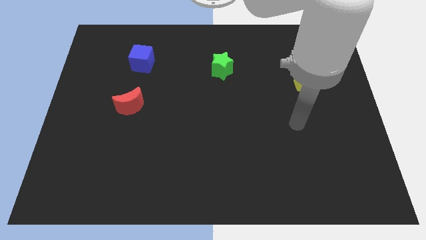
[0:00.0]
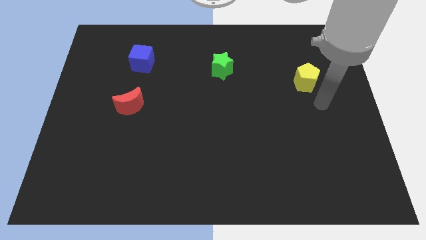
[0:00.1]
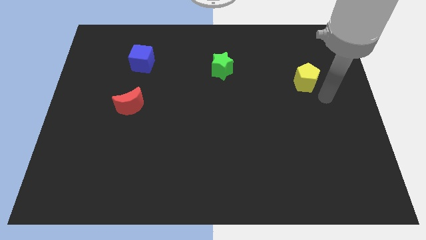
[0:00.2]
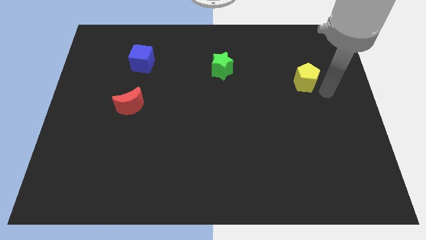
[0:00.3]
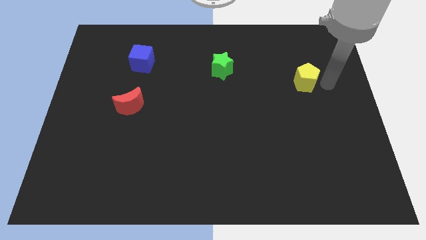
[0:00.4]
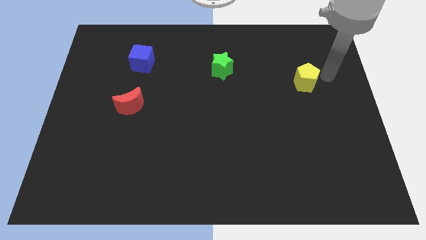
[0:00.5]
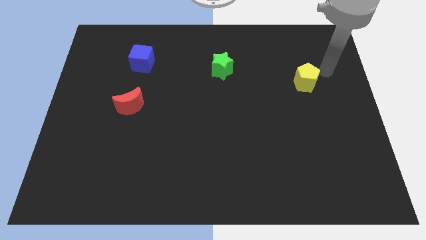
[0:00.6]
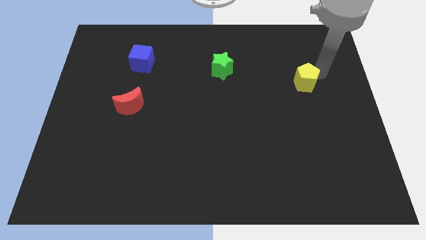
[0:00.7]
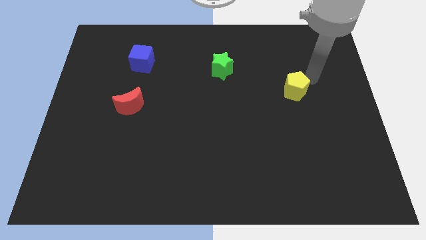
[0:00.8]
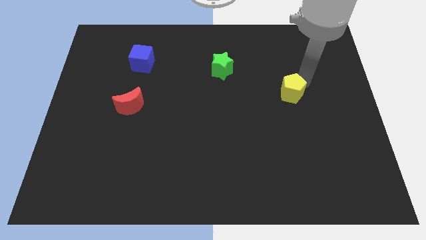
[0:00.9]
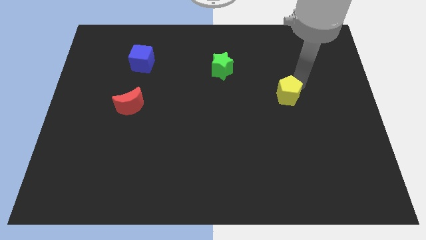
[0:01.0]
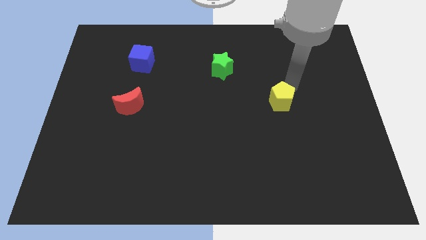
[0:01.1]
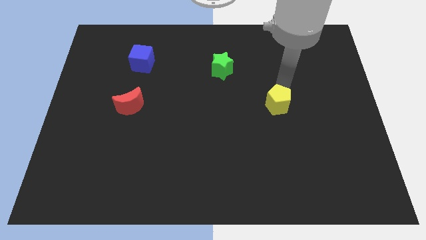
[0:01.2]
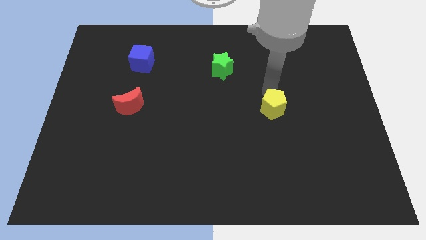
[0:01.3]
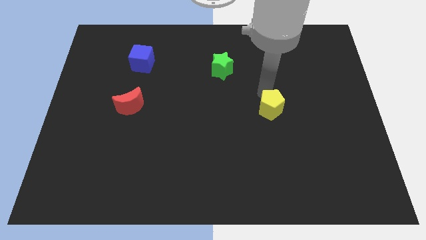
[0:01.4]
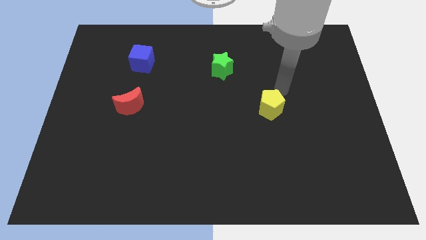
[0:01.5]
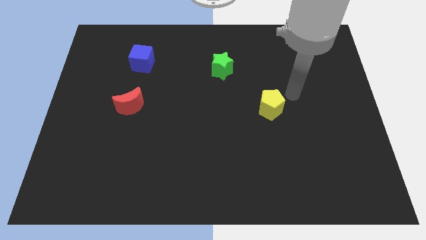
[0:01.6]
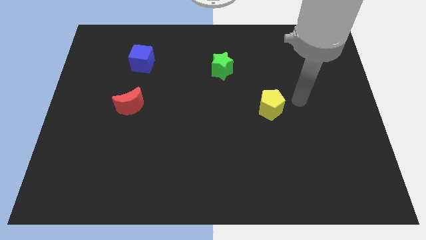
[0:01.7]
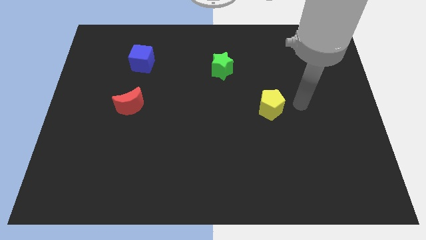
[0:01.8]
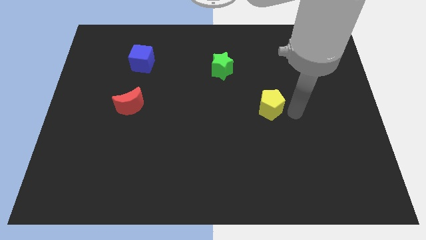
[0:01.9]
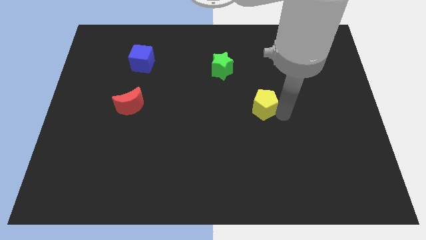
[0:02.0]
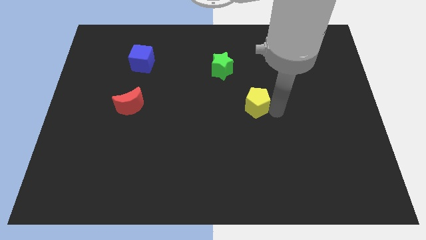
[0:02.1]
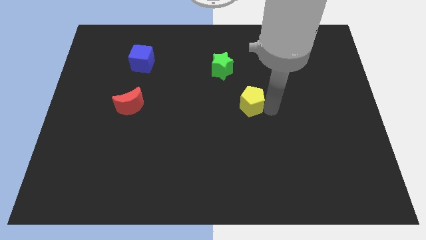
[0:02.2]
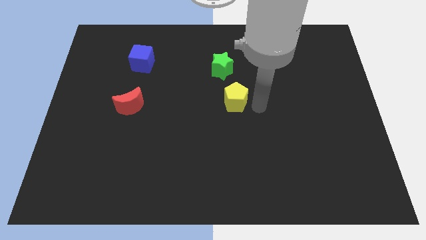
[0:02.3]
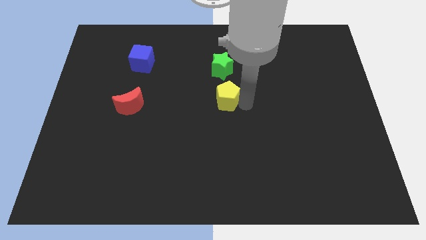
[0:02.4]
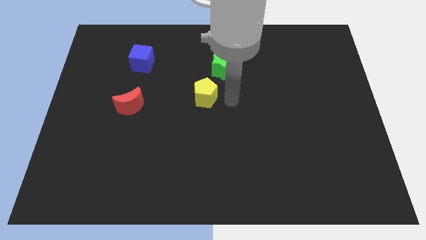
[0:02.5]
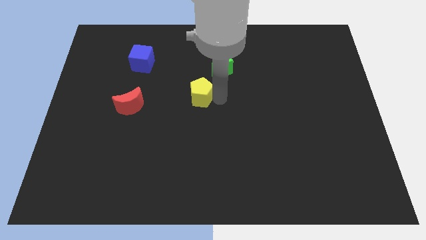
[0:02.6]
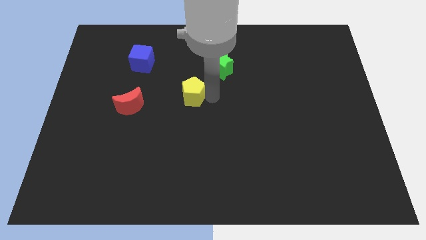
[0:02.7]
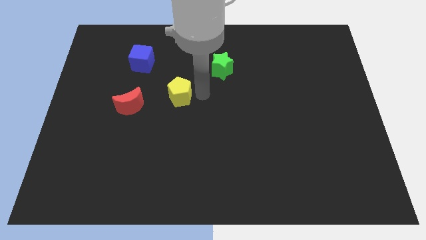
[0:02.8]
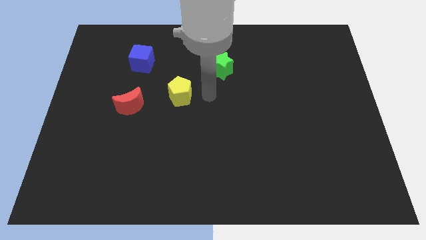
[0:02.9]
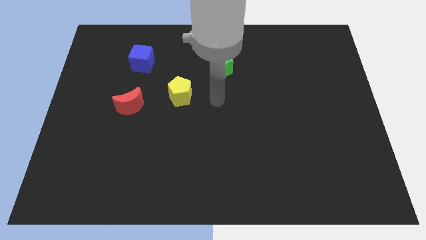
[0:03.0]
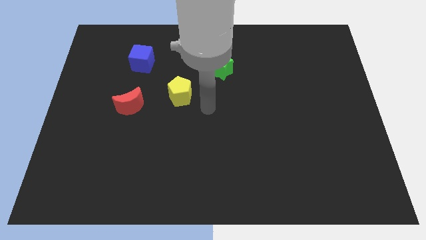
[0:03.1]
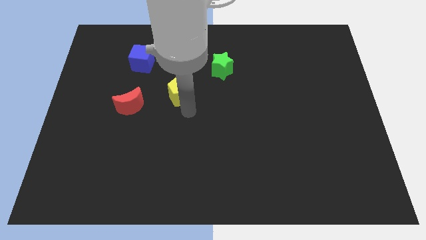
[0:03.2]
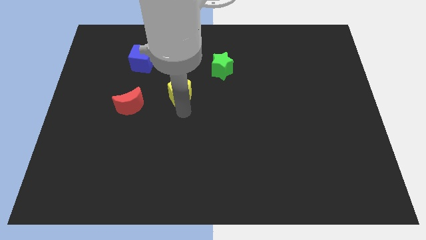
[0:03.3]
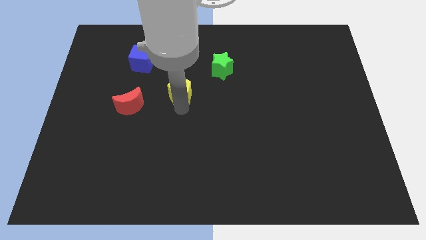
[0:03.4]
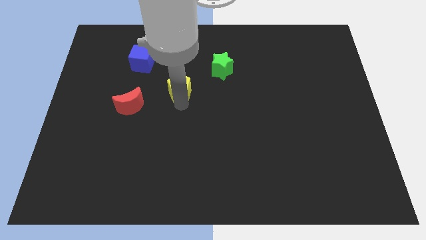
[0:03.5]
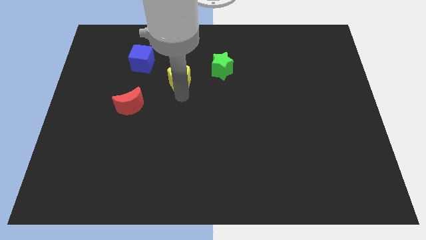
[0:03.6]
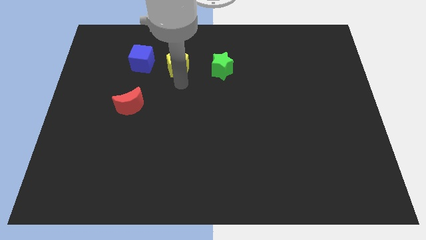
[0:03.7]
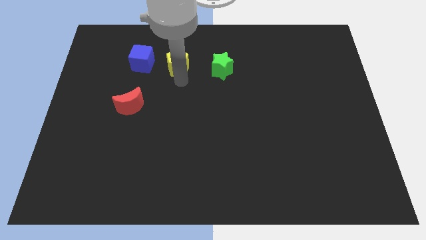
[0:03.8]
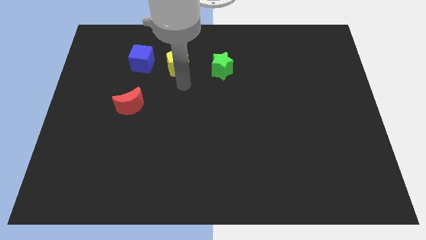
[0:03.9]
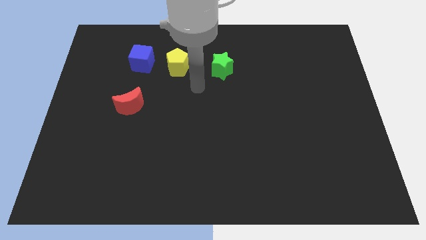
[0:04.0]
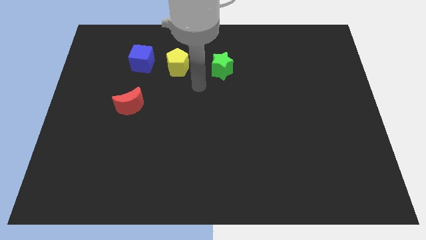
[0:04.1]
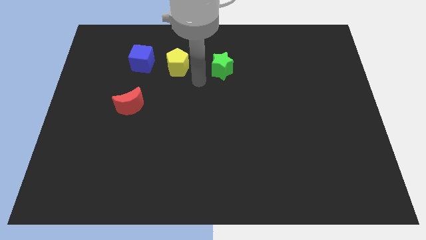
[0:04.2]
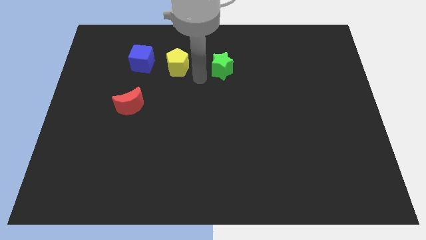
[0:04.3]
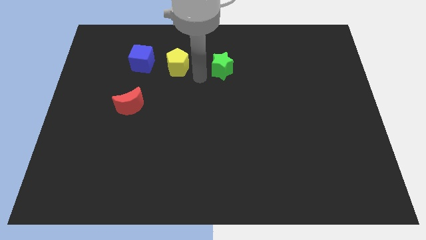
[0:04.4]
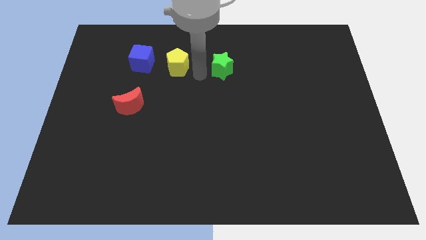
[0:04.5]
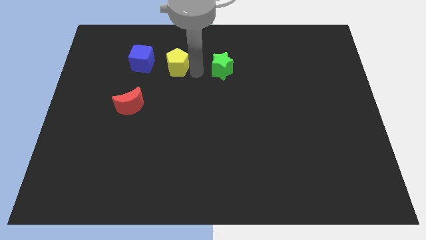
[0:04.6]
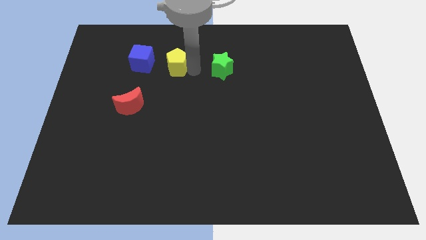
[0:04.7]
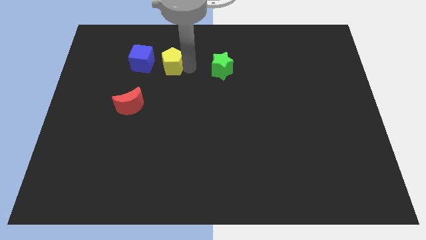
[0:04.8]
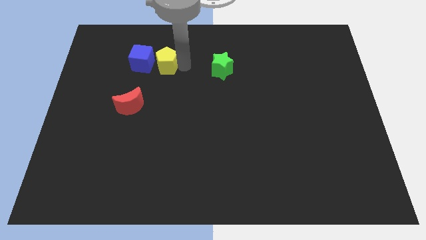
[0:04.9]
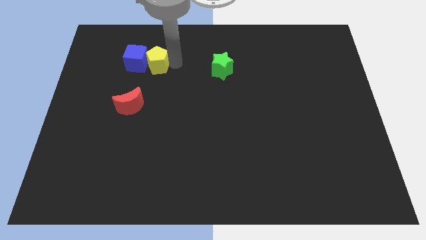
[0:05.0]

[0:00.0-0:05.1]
move the yellow pentagon to the blue block

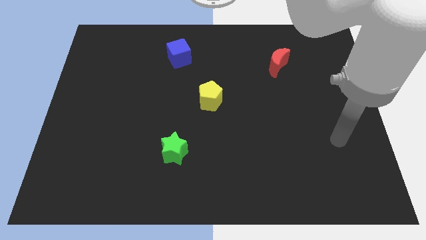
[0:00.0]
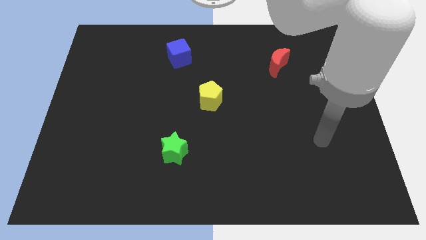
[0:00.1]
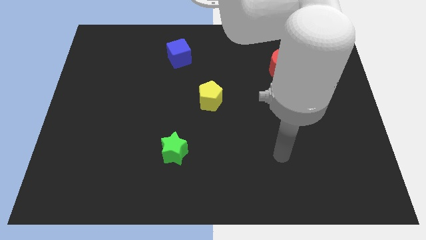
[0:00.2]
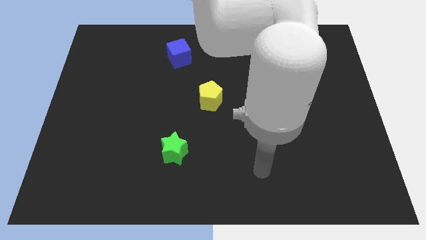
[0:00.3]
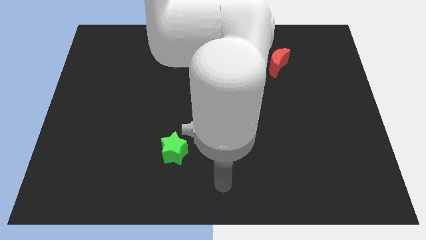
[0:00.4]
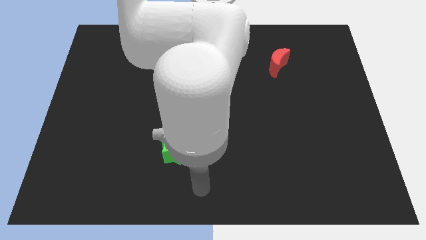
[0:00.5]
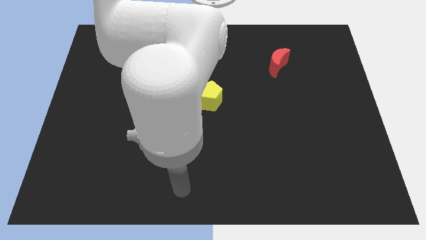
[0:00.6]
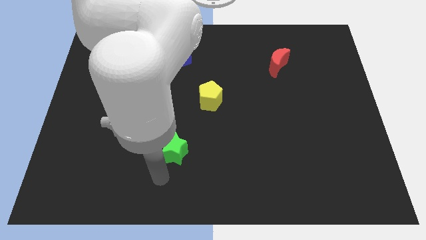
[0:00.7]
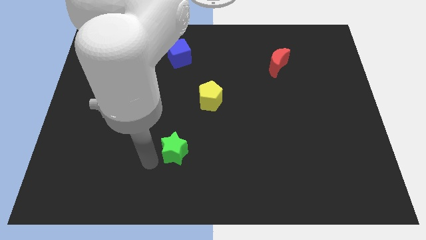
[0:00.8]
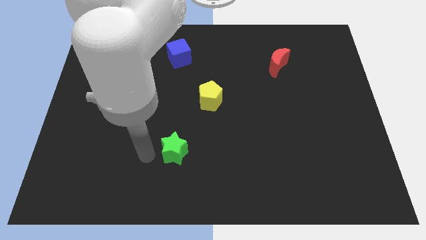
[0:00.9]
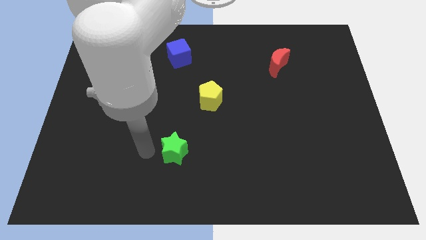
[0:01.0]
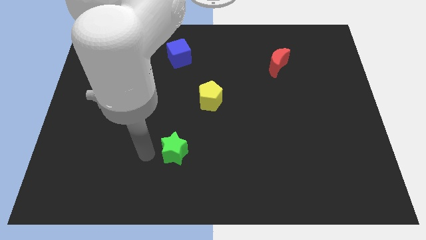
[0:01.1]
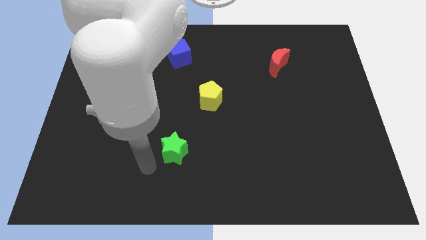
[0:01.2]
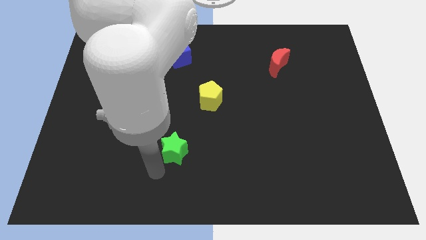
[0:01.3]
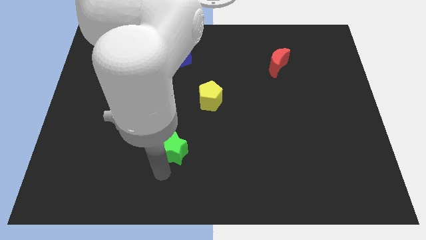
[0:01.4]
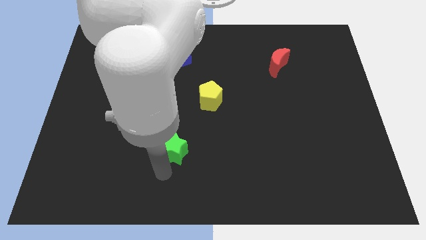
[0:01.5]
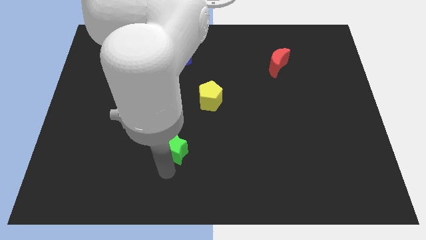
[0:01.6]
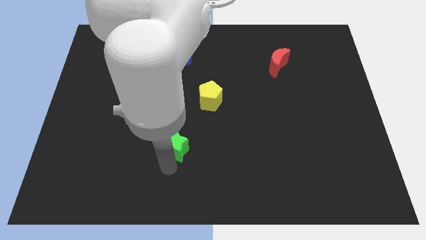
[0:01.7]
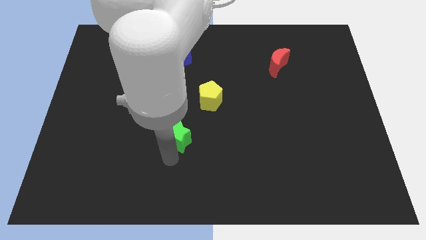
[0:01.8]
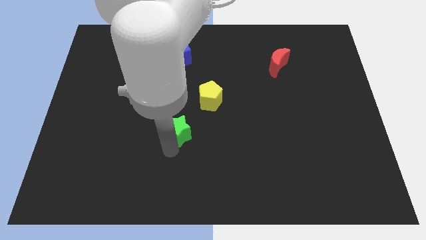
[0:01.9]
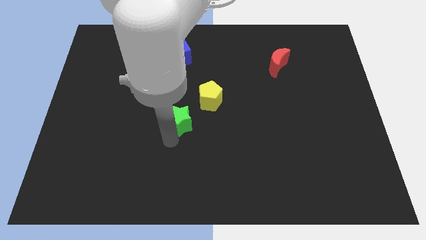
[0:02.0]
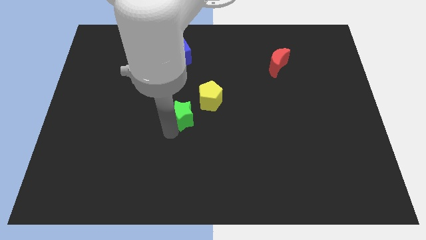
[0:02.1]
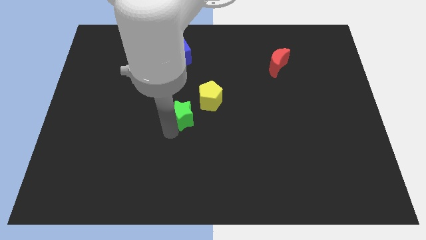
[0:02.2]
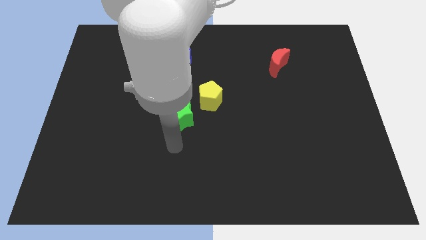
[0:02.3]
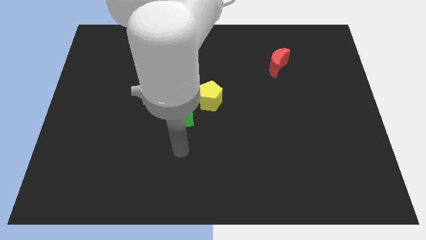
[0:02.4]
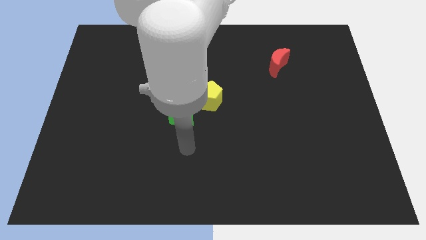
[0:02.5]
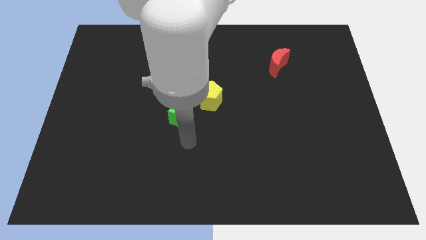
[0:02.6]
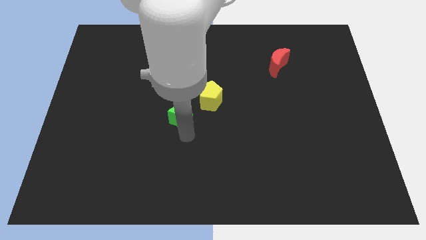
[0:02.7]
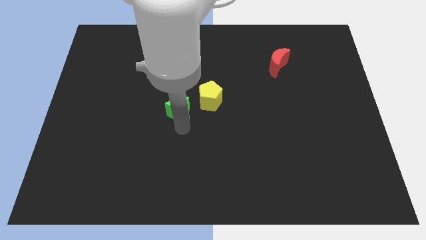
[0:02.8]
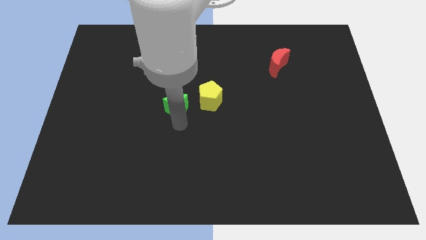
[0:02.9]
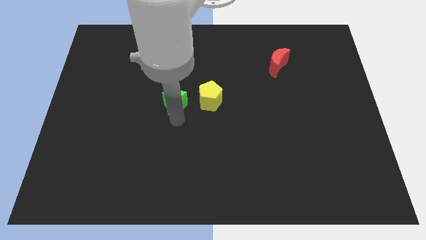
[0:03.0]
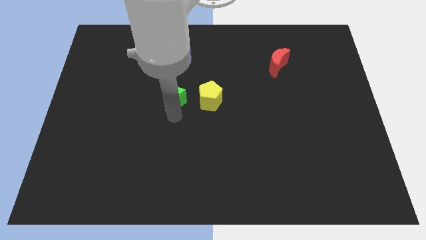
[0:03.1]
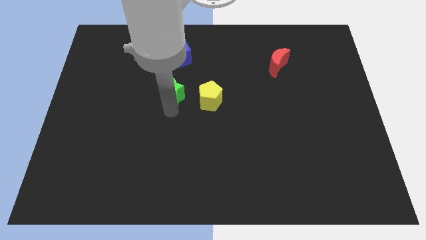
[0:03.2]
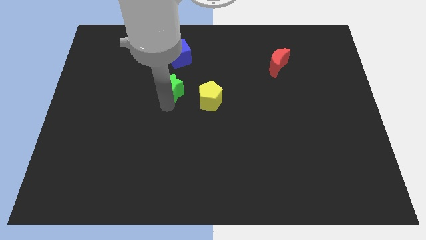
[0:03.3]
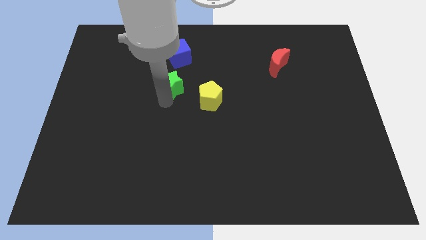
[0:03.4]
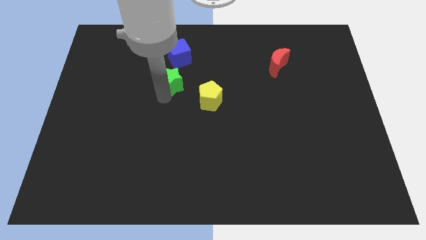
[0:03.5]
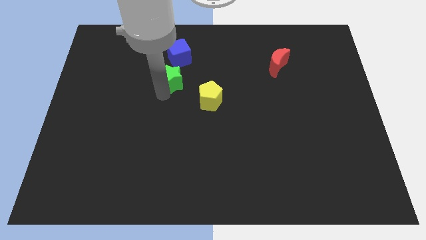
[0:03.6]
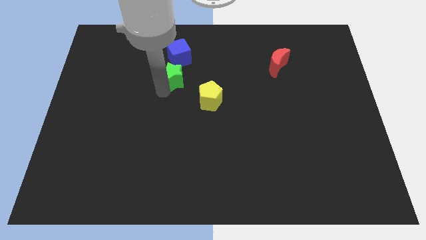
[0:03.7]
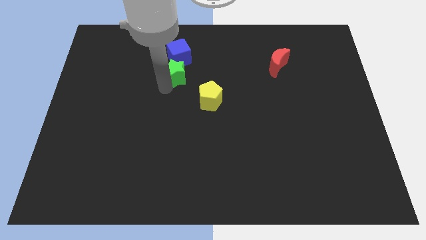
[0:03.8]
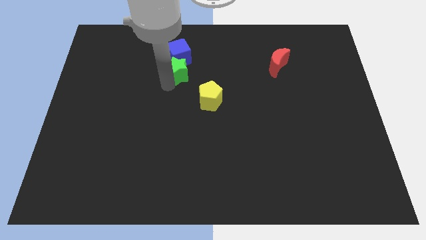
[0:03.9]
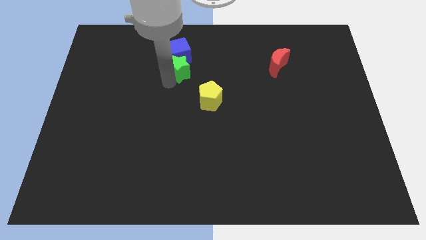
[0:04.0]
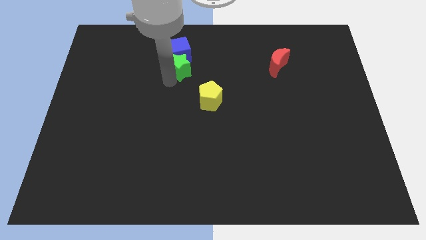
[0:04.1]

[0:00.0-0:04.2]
move the star next to the cube
